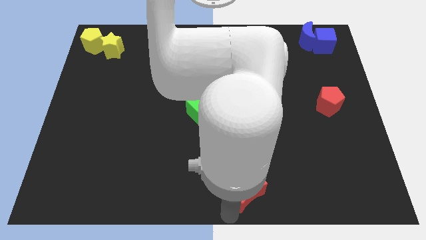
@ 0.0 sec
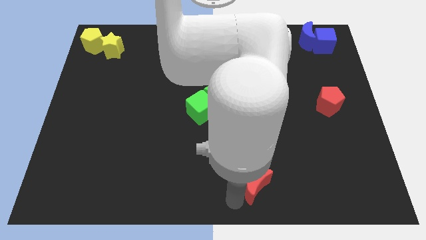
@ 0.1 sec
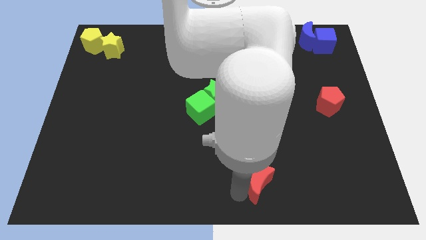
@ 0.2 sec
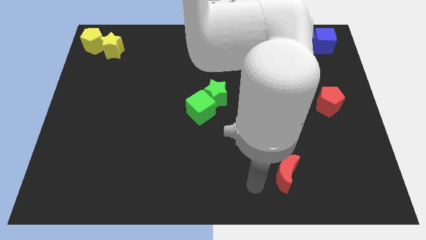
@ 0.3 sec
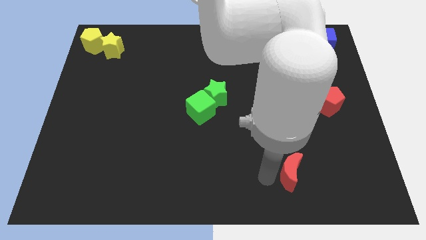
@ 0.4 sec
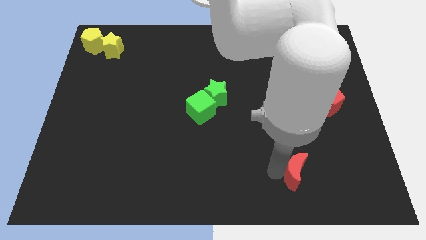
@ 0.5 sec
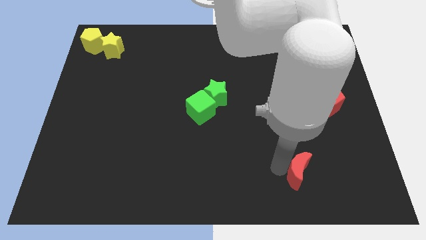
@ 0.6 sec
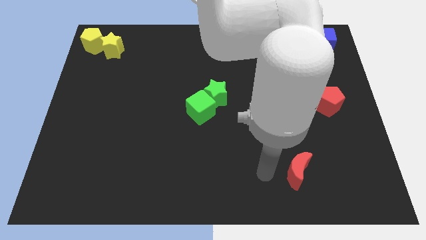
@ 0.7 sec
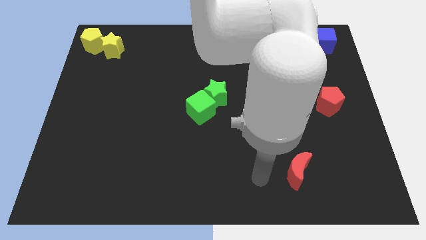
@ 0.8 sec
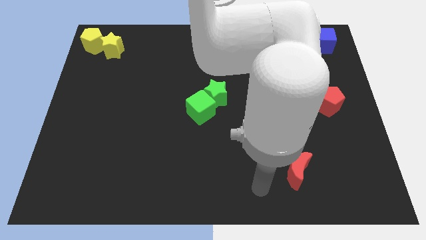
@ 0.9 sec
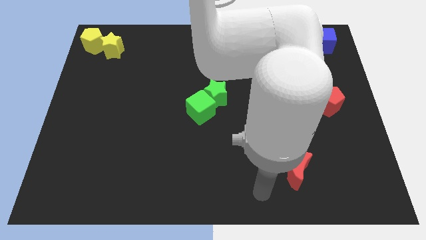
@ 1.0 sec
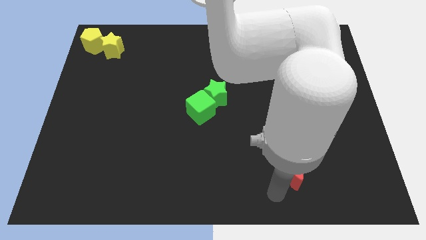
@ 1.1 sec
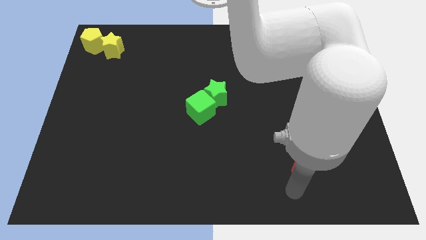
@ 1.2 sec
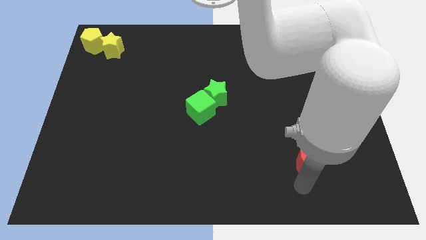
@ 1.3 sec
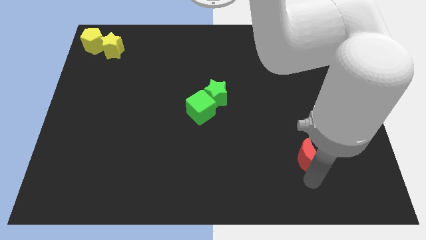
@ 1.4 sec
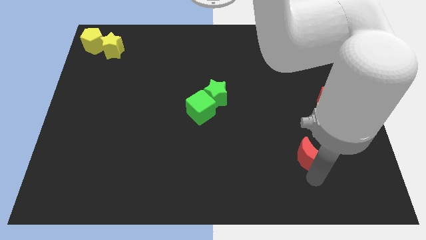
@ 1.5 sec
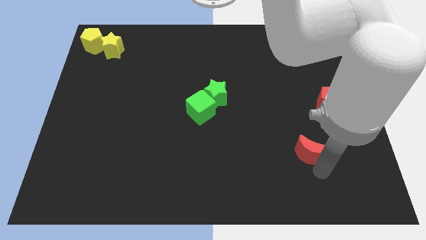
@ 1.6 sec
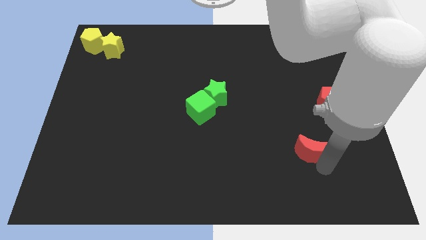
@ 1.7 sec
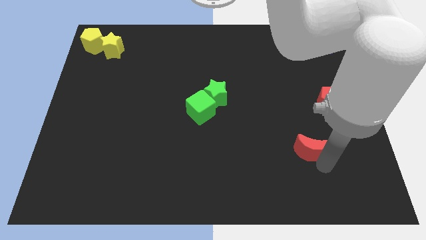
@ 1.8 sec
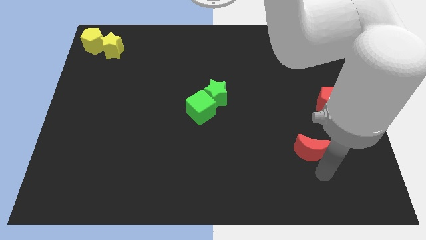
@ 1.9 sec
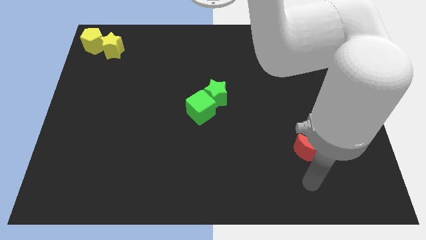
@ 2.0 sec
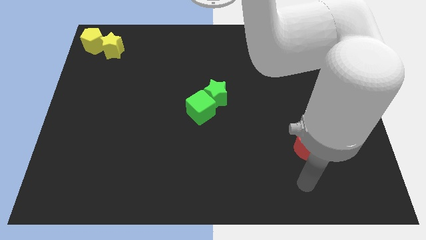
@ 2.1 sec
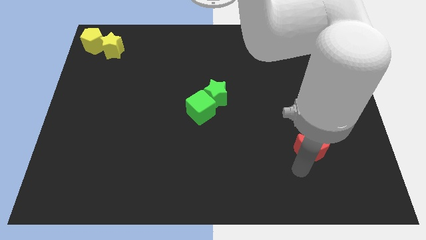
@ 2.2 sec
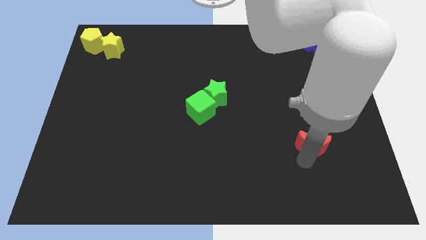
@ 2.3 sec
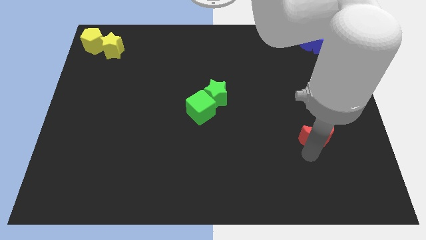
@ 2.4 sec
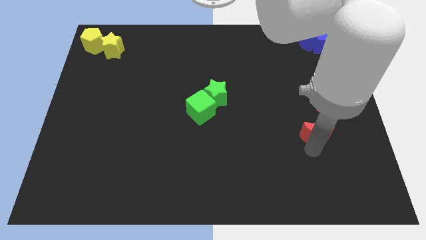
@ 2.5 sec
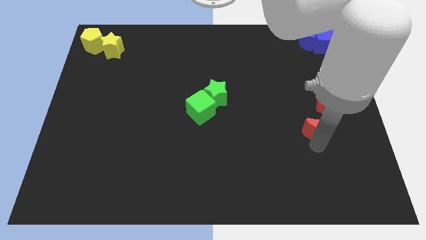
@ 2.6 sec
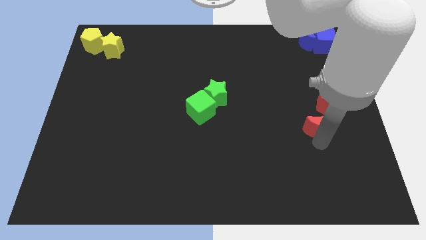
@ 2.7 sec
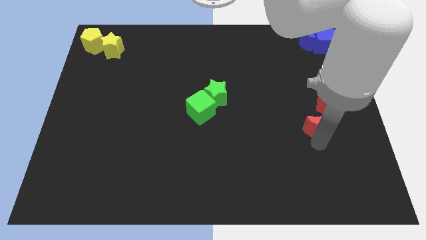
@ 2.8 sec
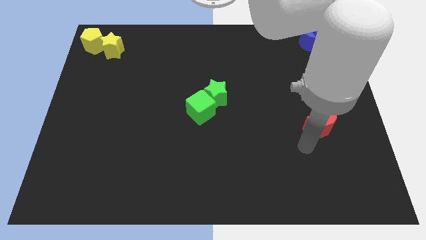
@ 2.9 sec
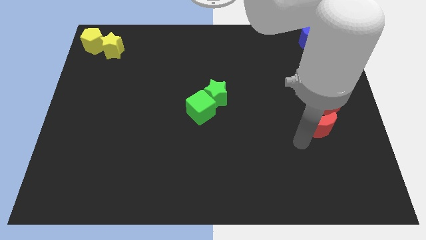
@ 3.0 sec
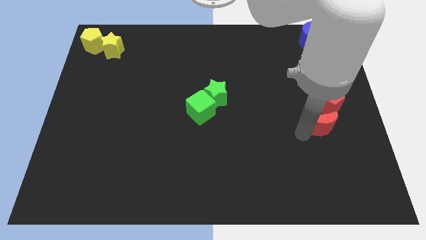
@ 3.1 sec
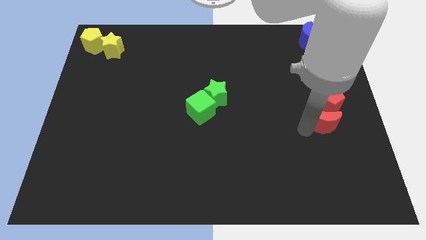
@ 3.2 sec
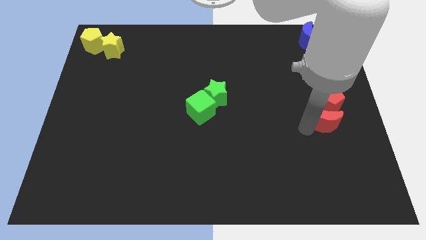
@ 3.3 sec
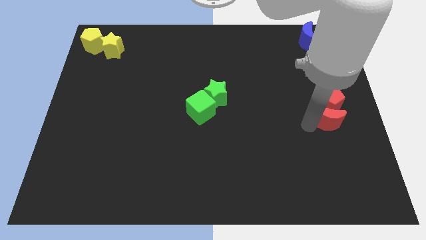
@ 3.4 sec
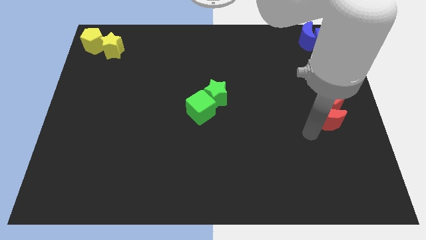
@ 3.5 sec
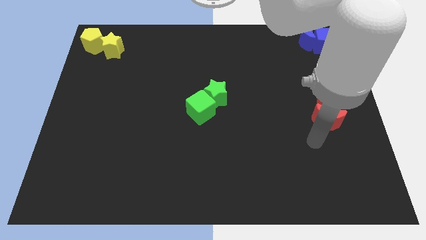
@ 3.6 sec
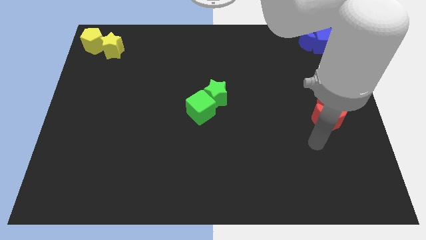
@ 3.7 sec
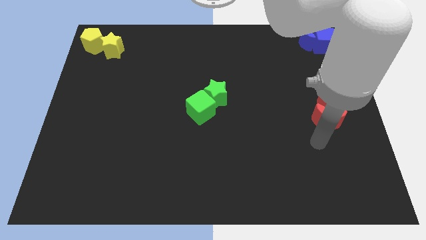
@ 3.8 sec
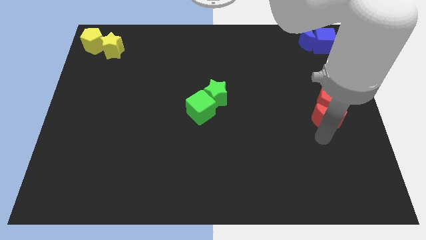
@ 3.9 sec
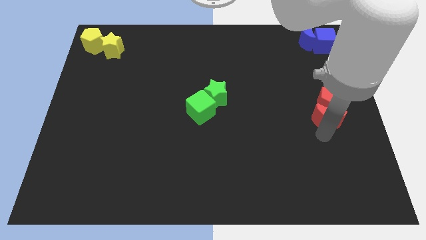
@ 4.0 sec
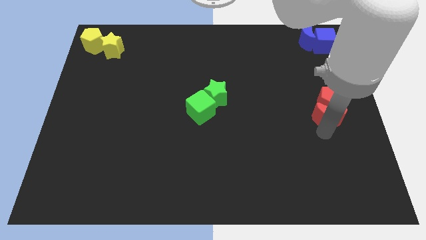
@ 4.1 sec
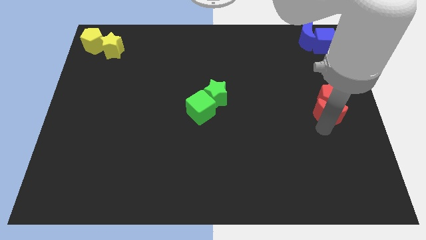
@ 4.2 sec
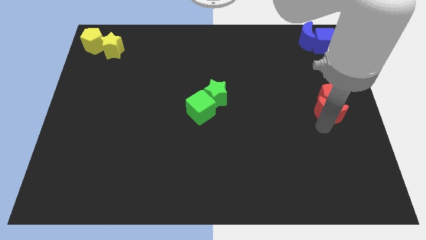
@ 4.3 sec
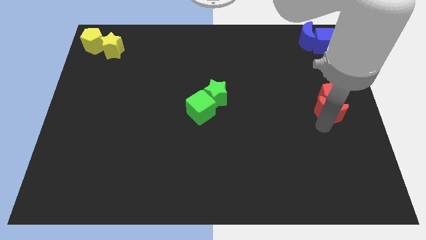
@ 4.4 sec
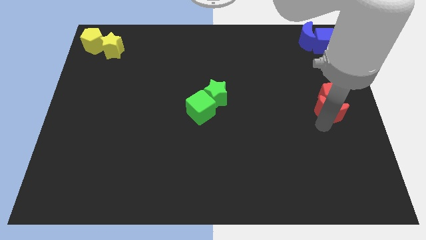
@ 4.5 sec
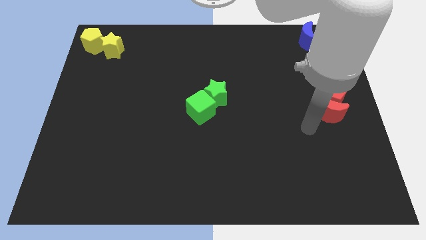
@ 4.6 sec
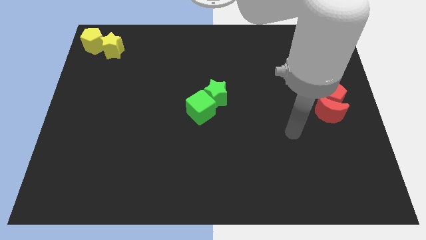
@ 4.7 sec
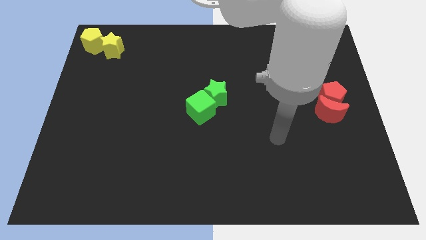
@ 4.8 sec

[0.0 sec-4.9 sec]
move red moon below the red pentagon

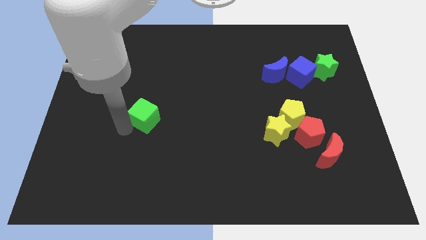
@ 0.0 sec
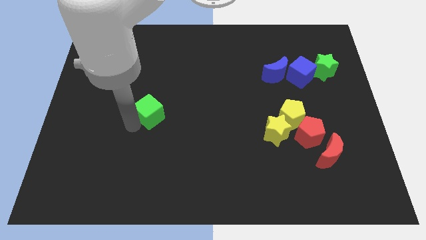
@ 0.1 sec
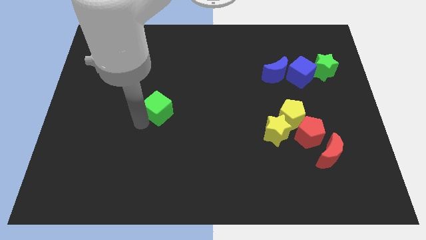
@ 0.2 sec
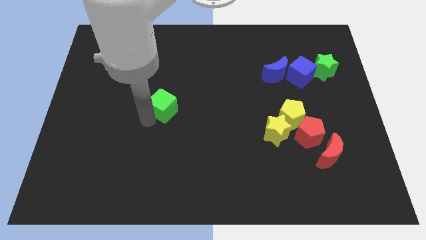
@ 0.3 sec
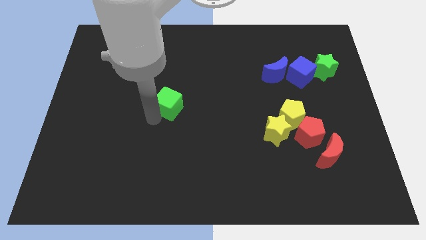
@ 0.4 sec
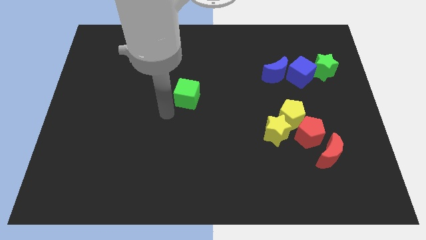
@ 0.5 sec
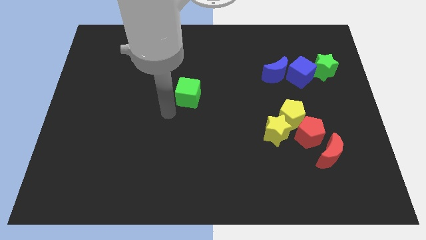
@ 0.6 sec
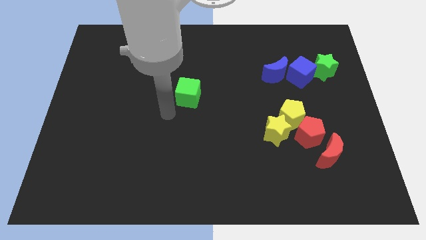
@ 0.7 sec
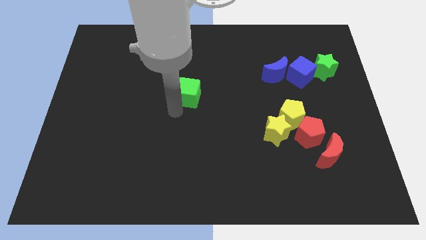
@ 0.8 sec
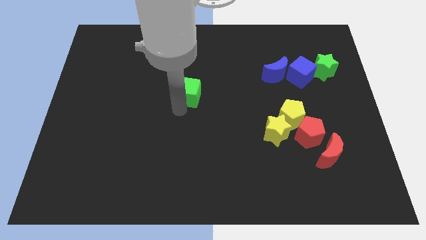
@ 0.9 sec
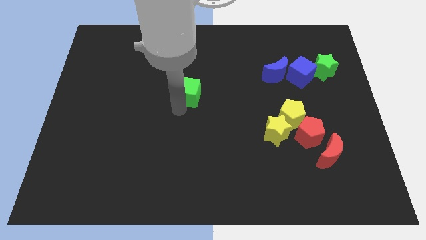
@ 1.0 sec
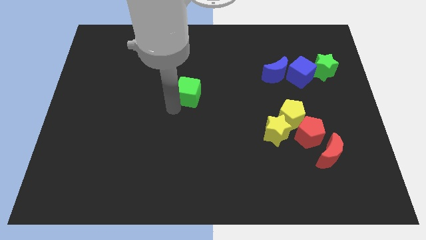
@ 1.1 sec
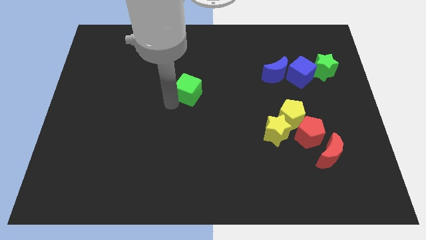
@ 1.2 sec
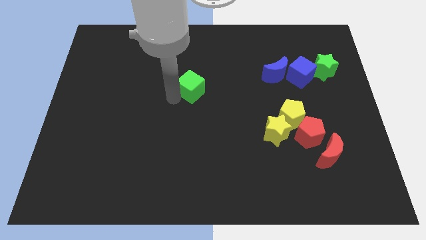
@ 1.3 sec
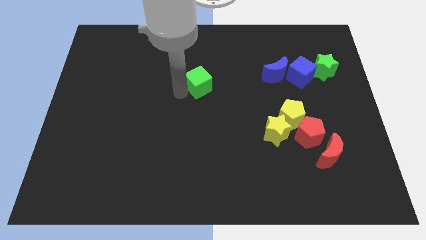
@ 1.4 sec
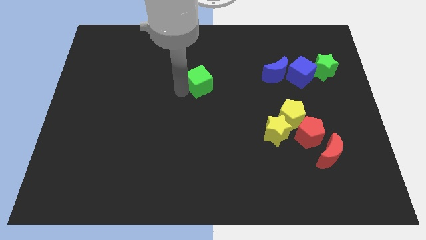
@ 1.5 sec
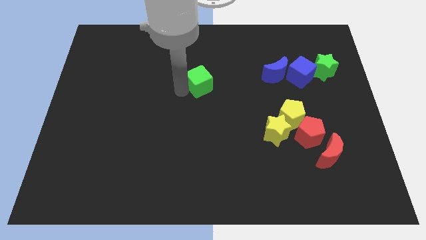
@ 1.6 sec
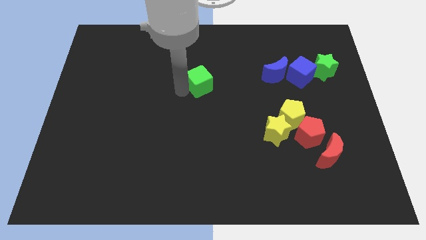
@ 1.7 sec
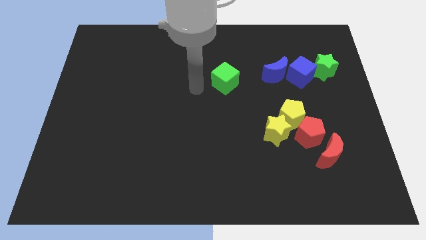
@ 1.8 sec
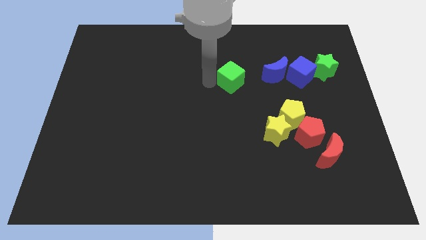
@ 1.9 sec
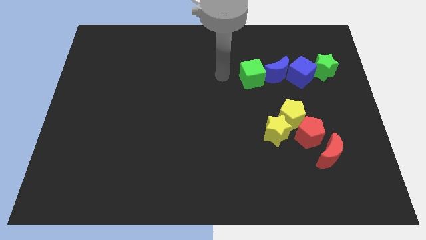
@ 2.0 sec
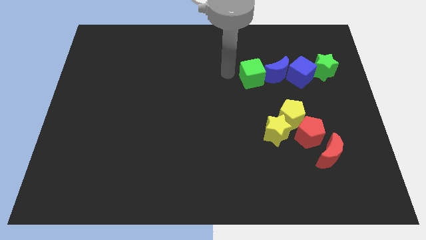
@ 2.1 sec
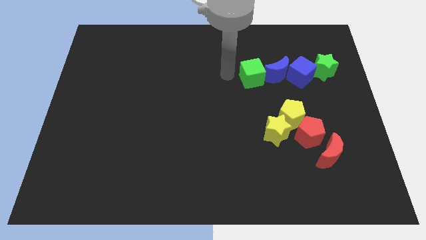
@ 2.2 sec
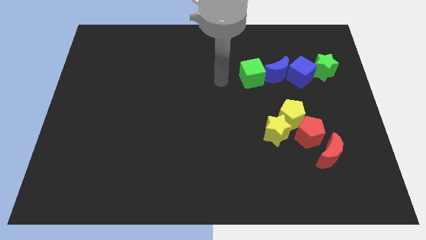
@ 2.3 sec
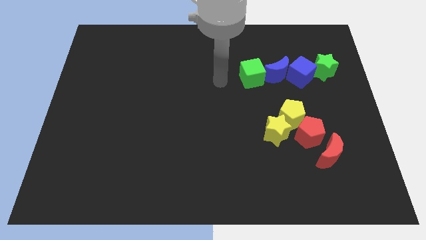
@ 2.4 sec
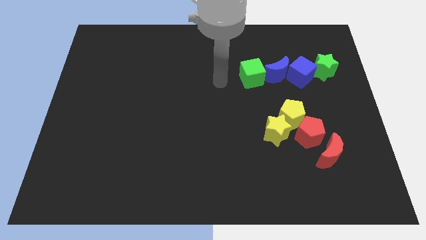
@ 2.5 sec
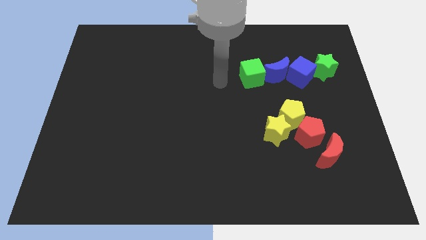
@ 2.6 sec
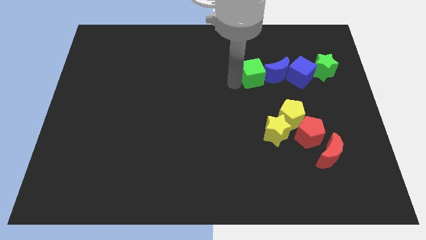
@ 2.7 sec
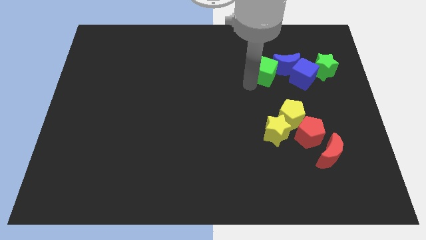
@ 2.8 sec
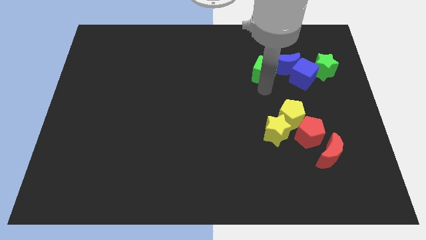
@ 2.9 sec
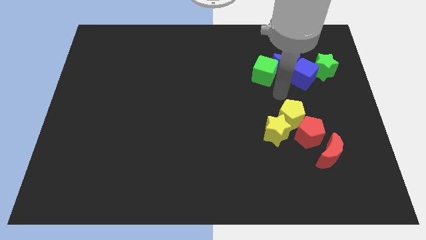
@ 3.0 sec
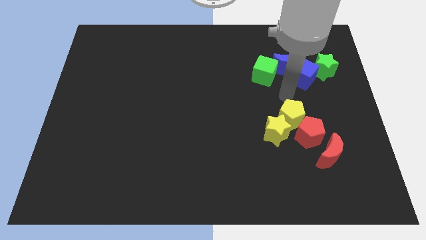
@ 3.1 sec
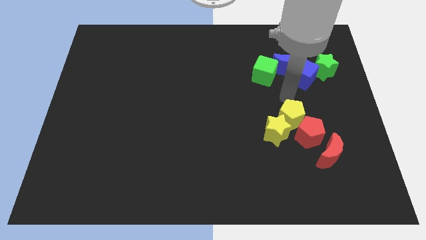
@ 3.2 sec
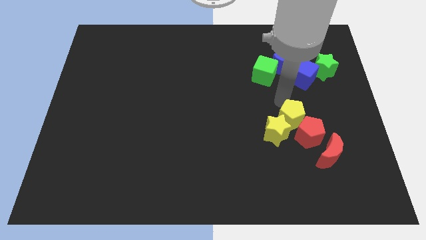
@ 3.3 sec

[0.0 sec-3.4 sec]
slide the green cube into the blue crescent

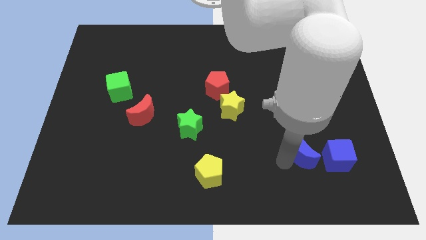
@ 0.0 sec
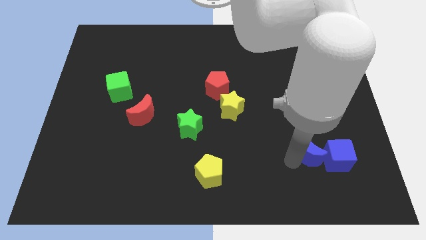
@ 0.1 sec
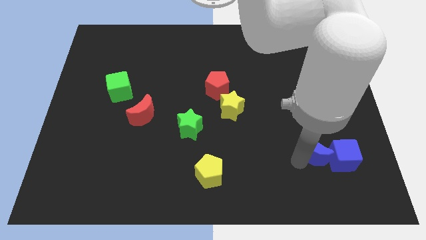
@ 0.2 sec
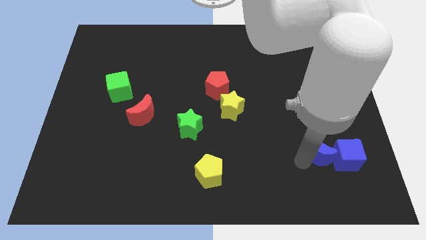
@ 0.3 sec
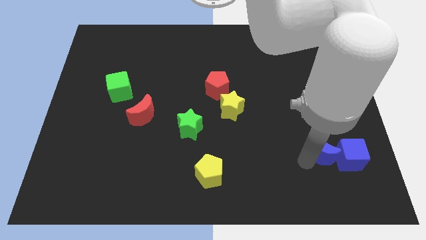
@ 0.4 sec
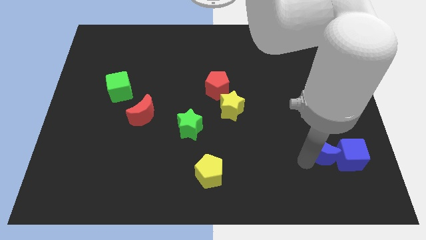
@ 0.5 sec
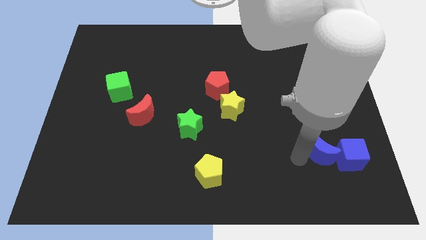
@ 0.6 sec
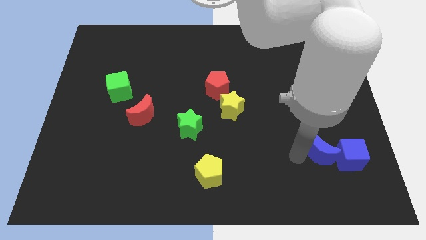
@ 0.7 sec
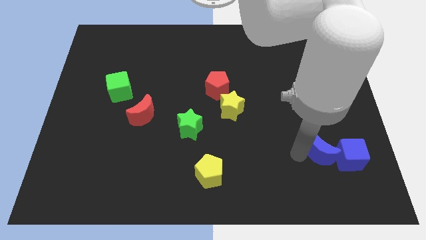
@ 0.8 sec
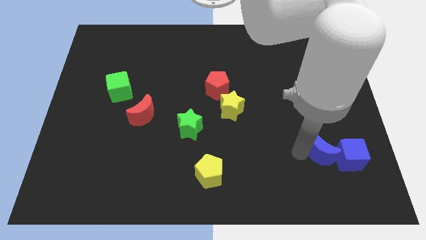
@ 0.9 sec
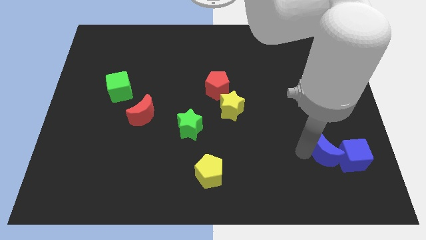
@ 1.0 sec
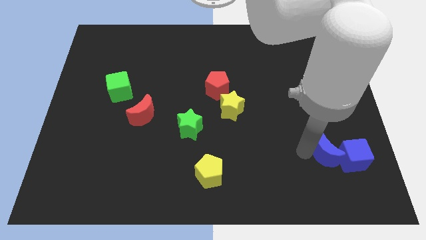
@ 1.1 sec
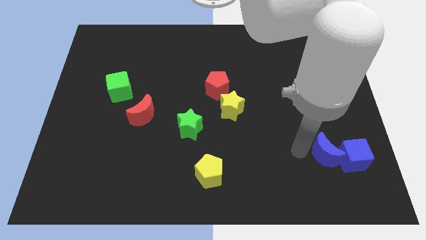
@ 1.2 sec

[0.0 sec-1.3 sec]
push the blue moon in to the blue cube
